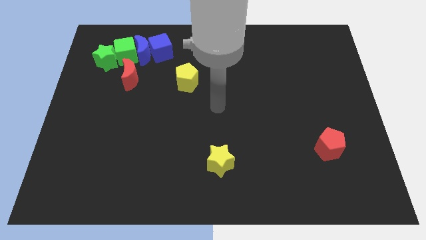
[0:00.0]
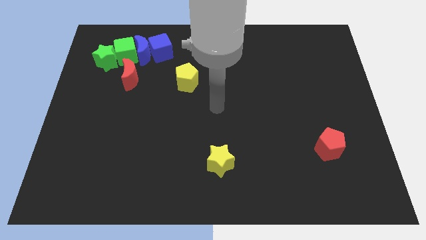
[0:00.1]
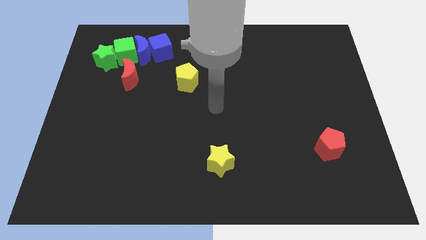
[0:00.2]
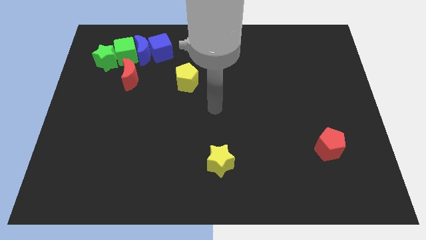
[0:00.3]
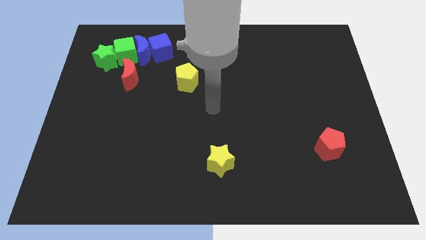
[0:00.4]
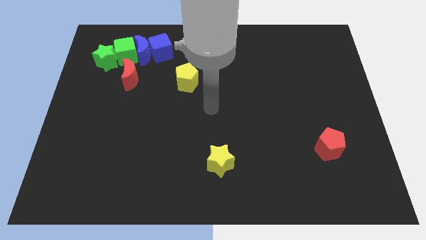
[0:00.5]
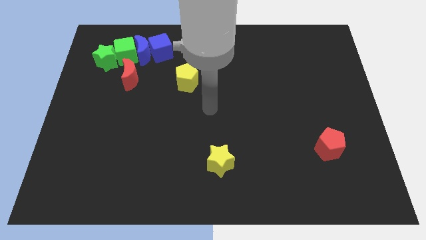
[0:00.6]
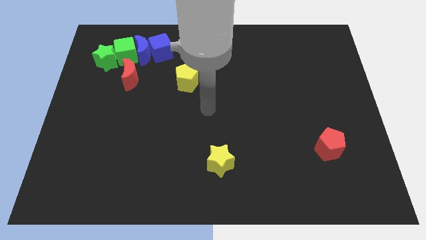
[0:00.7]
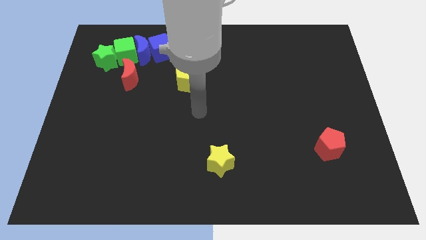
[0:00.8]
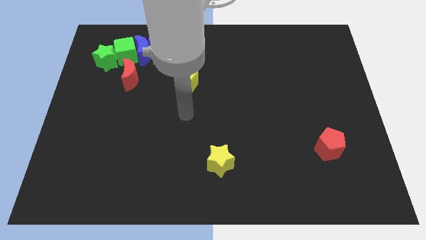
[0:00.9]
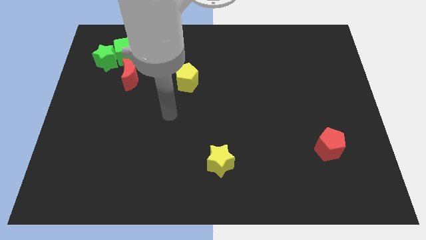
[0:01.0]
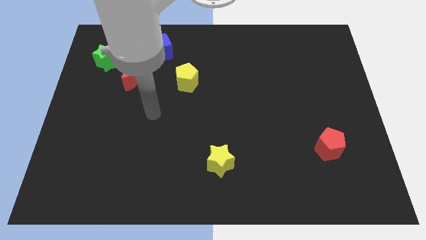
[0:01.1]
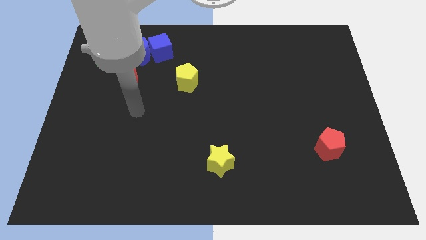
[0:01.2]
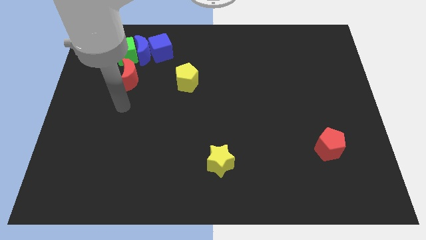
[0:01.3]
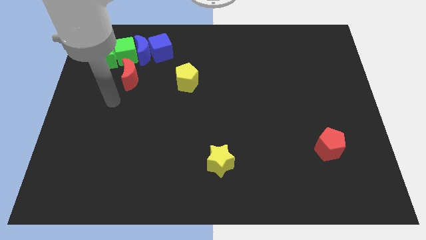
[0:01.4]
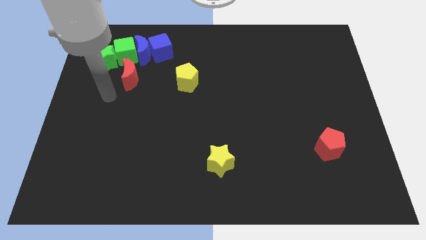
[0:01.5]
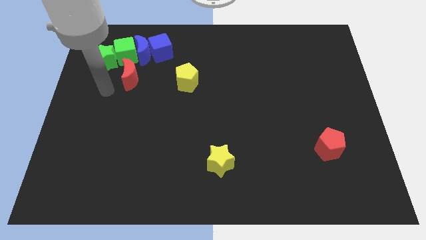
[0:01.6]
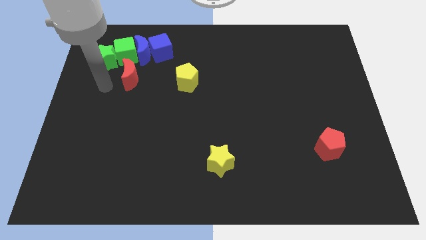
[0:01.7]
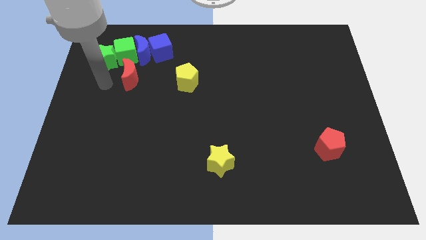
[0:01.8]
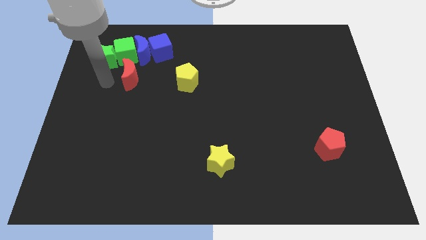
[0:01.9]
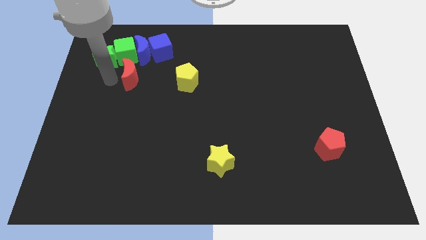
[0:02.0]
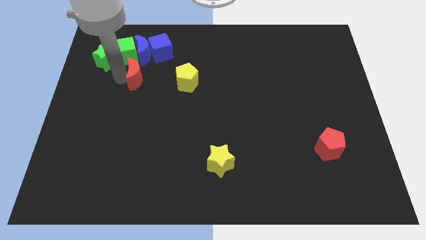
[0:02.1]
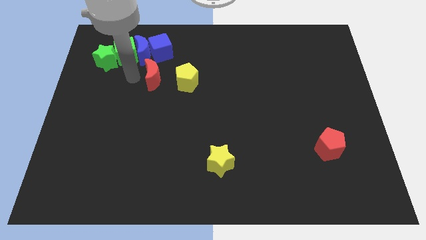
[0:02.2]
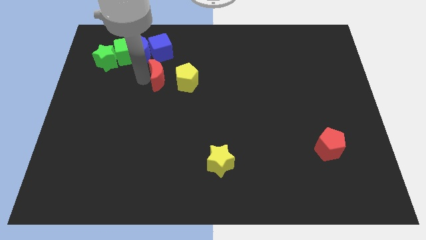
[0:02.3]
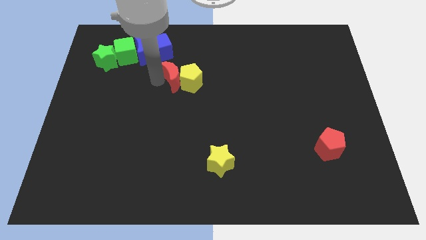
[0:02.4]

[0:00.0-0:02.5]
push the red moon towards the left side of the yellow pentagon

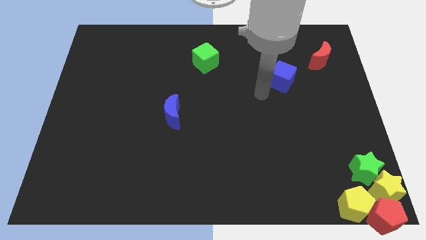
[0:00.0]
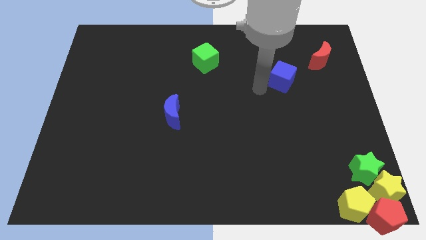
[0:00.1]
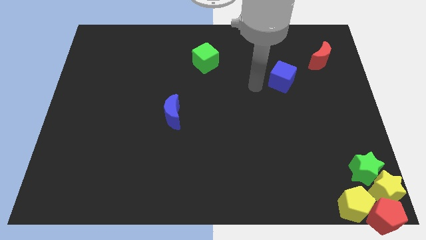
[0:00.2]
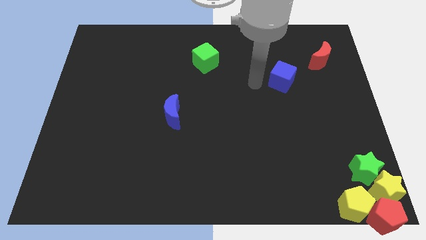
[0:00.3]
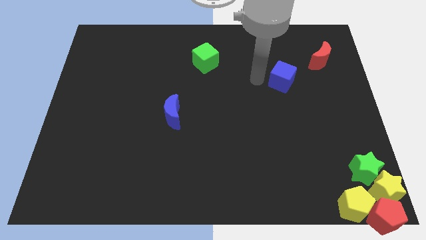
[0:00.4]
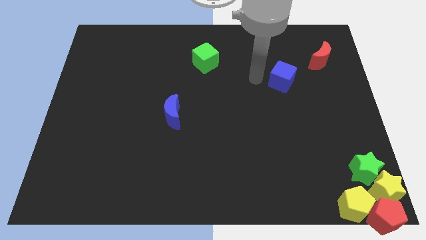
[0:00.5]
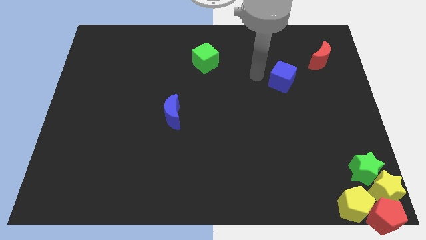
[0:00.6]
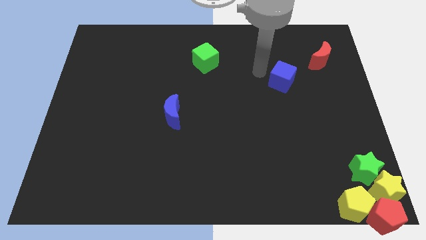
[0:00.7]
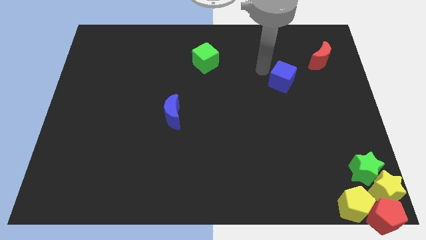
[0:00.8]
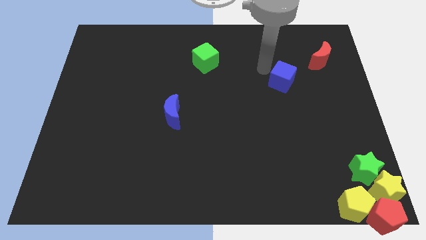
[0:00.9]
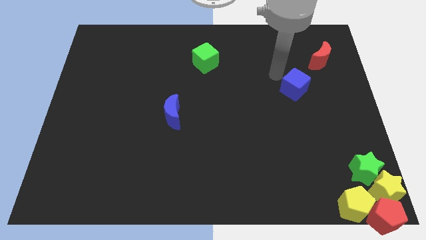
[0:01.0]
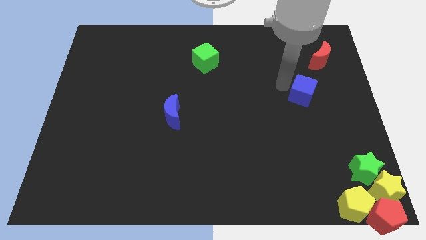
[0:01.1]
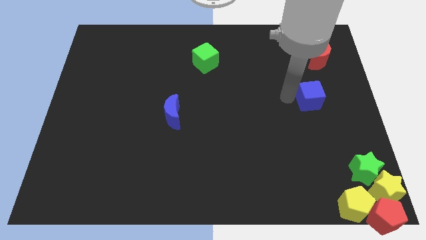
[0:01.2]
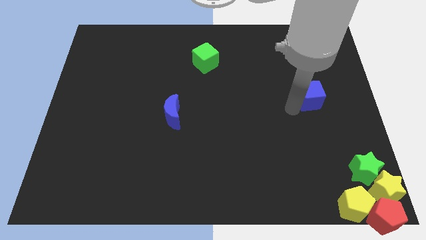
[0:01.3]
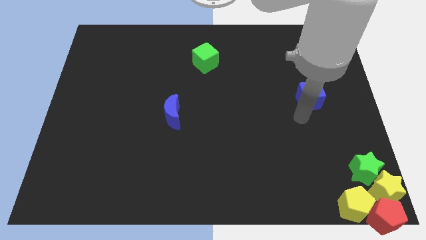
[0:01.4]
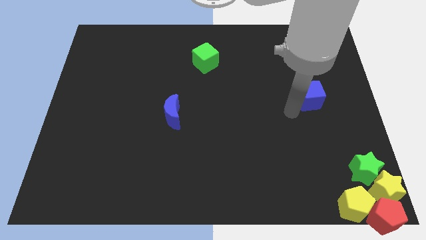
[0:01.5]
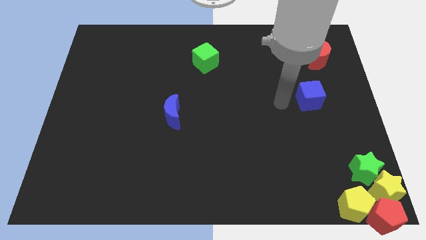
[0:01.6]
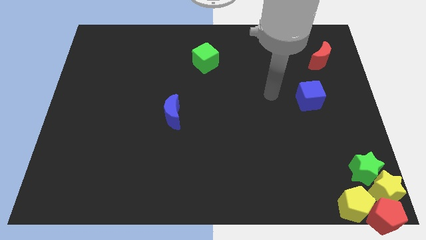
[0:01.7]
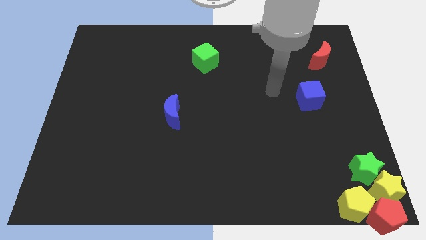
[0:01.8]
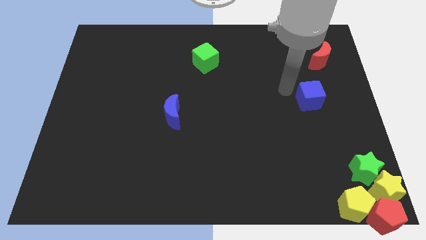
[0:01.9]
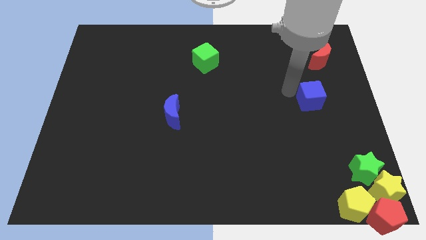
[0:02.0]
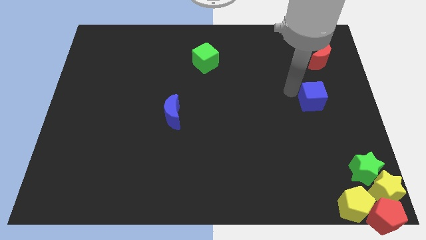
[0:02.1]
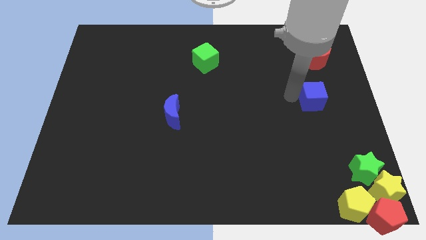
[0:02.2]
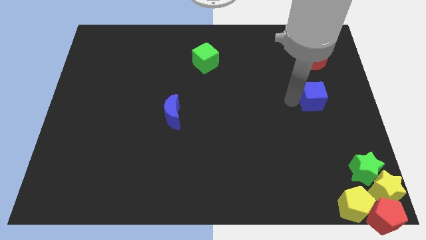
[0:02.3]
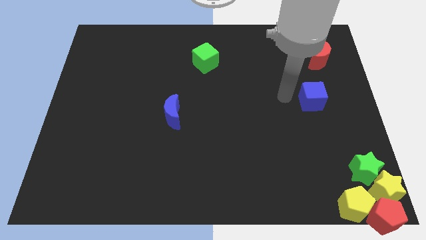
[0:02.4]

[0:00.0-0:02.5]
push the blue cube towards the bottom right corner of the board

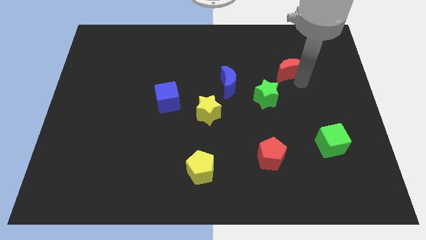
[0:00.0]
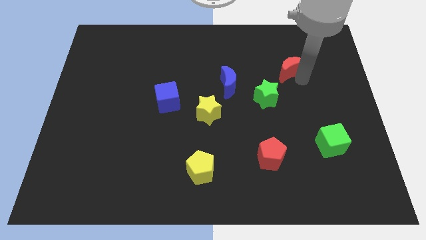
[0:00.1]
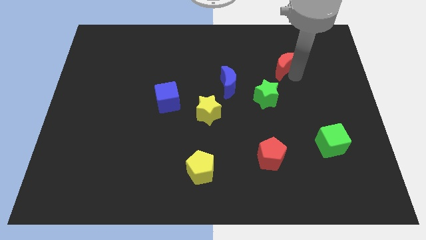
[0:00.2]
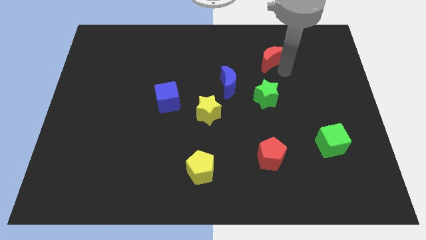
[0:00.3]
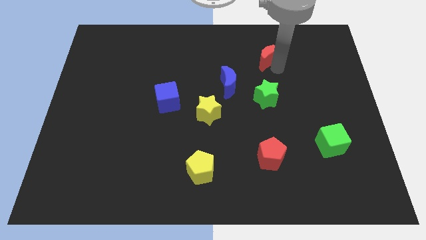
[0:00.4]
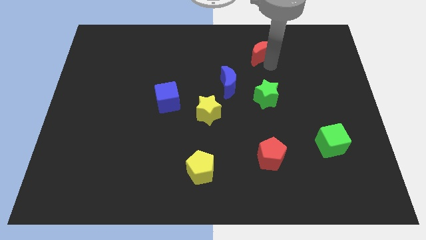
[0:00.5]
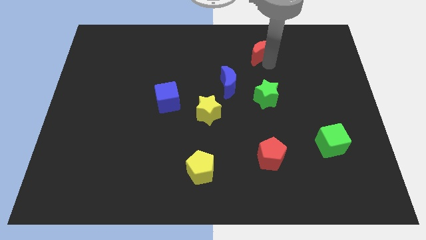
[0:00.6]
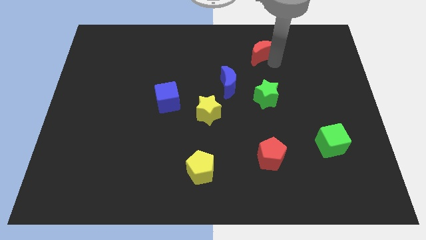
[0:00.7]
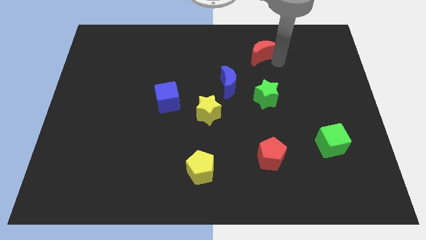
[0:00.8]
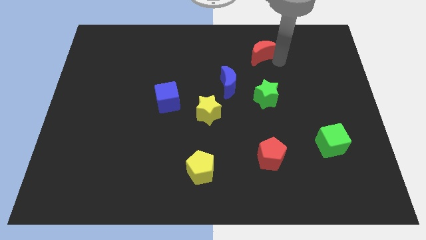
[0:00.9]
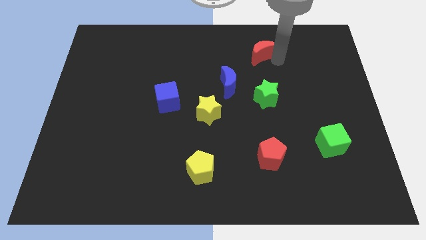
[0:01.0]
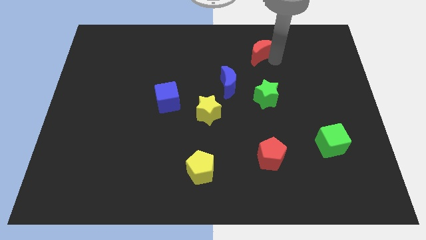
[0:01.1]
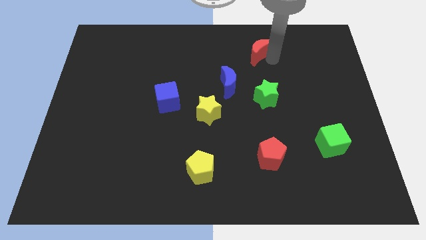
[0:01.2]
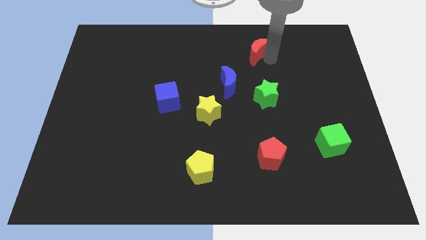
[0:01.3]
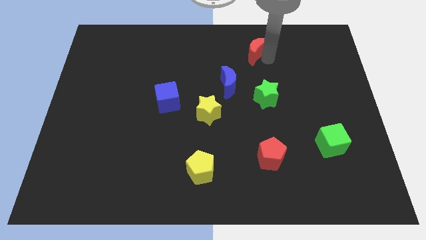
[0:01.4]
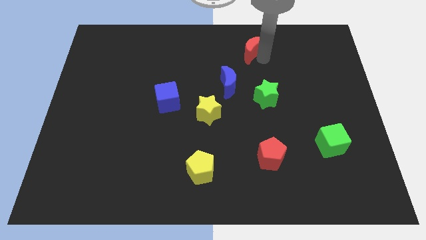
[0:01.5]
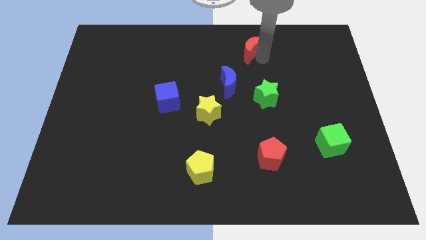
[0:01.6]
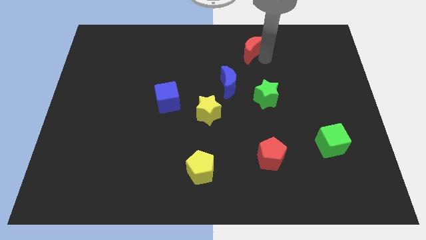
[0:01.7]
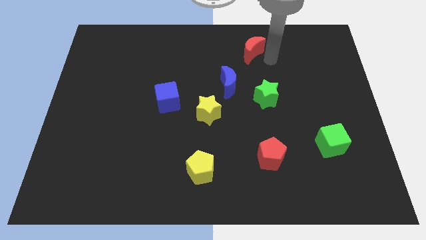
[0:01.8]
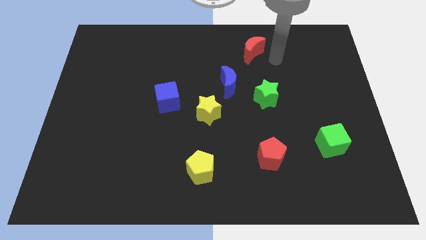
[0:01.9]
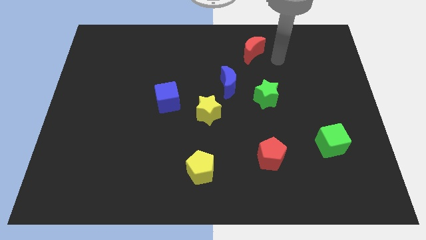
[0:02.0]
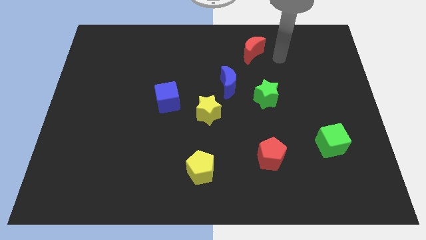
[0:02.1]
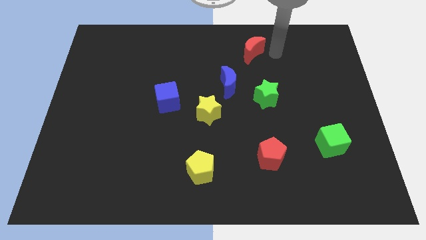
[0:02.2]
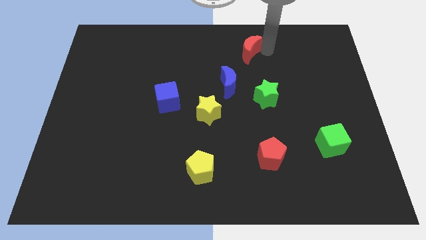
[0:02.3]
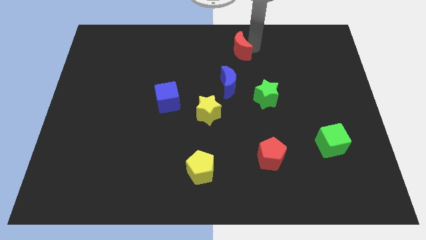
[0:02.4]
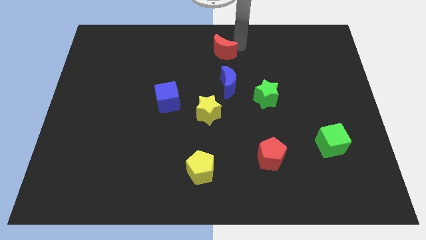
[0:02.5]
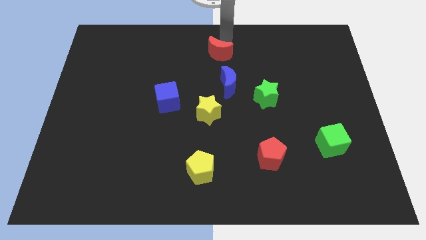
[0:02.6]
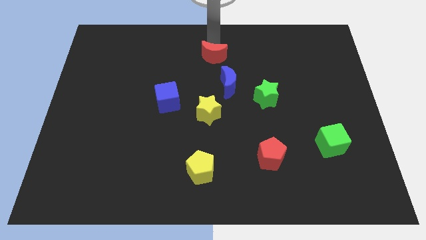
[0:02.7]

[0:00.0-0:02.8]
push the red crescent to the top of the blue crescent

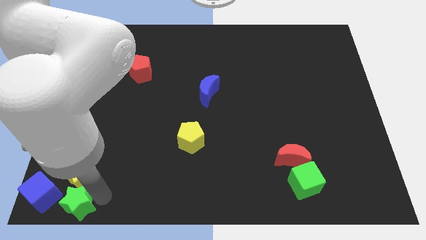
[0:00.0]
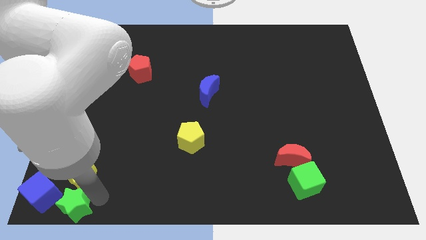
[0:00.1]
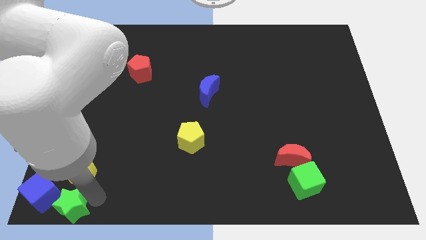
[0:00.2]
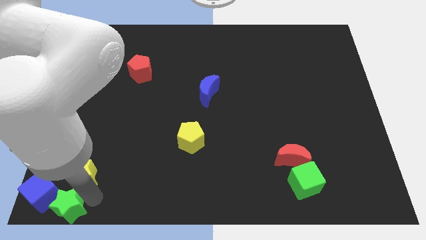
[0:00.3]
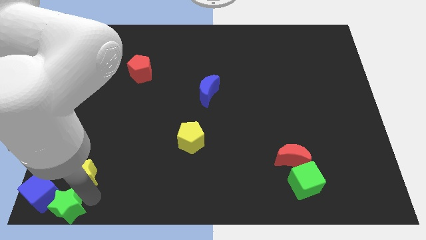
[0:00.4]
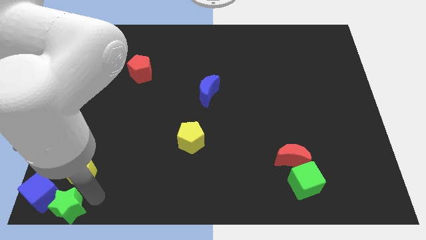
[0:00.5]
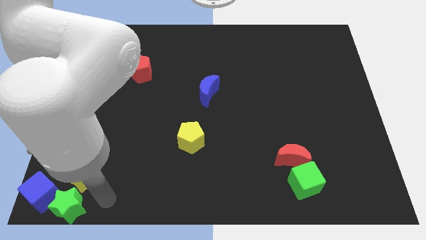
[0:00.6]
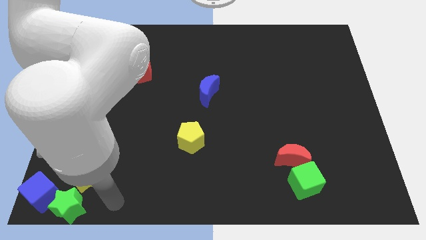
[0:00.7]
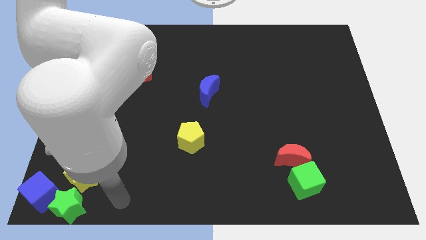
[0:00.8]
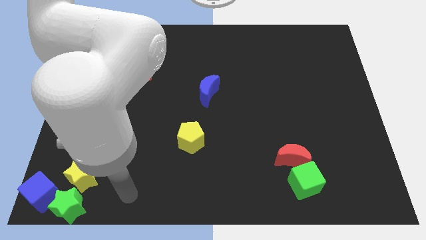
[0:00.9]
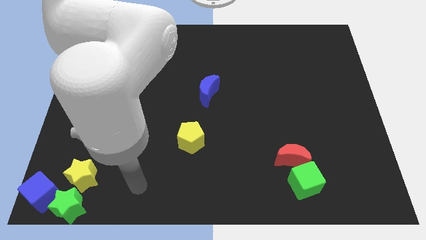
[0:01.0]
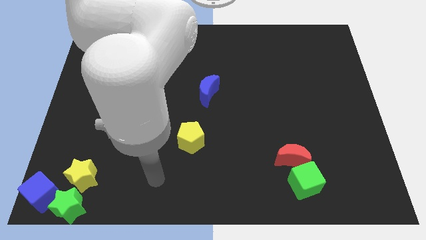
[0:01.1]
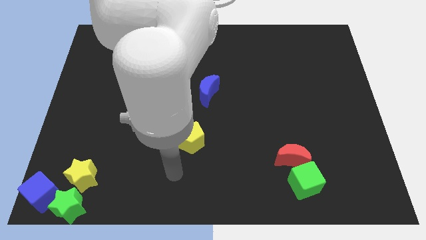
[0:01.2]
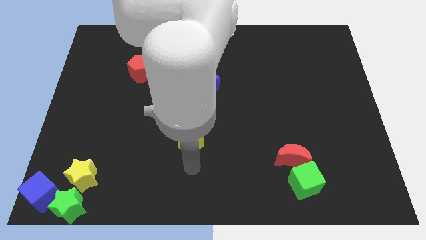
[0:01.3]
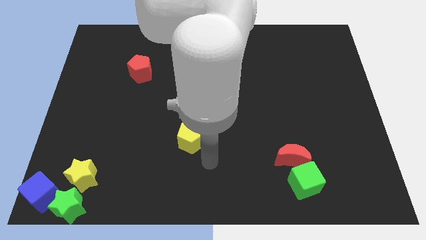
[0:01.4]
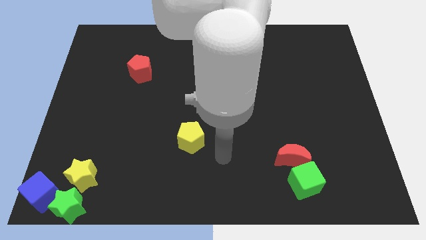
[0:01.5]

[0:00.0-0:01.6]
place the green star right to the blue cube
